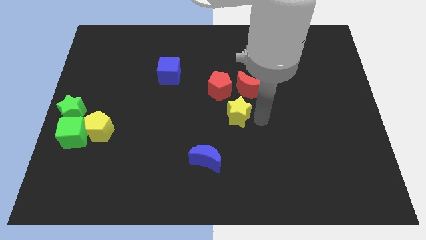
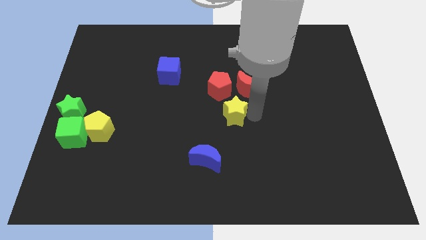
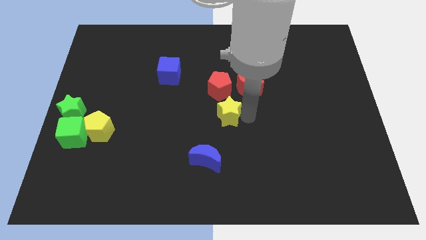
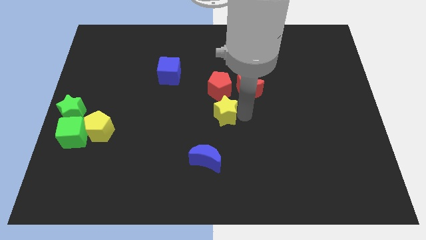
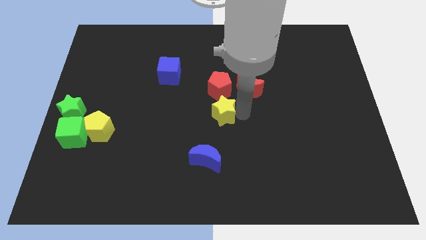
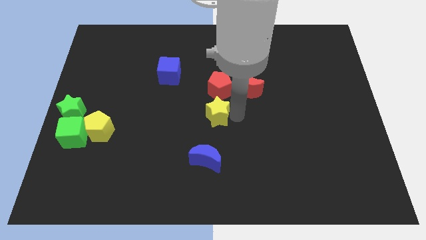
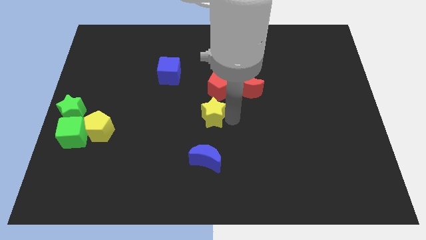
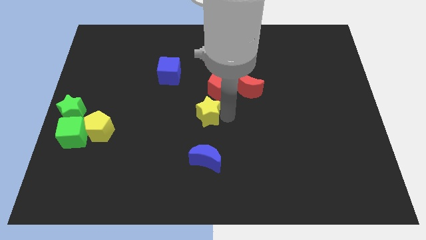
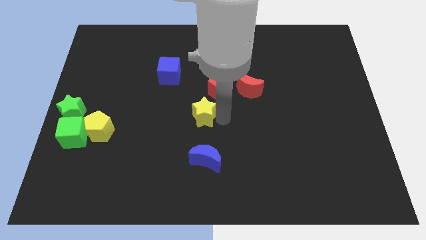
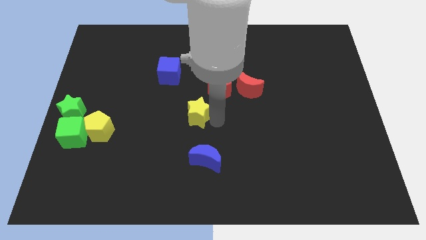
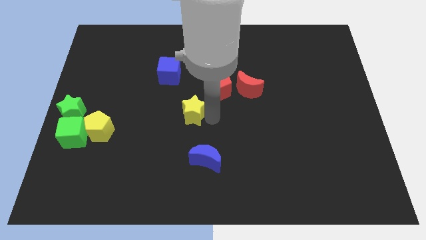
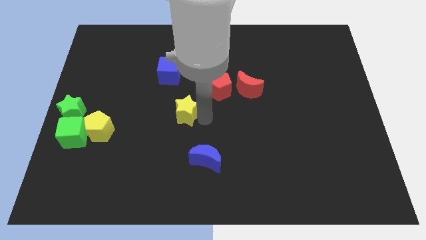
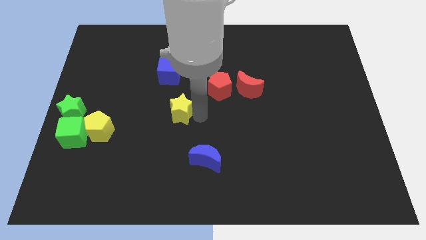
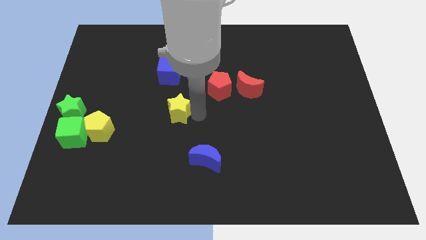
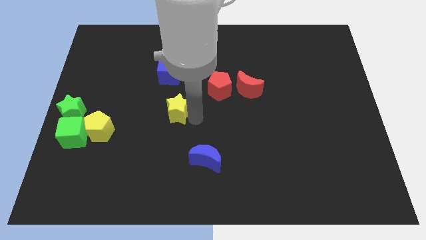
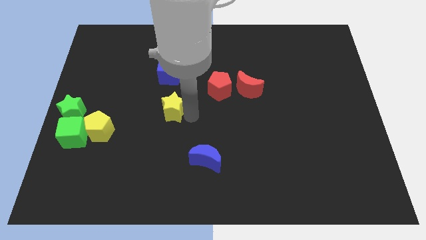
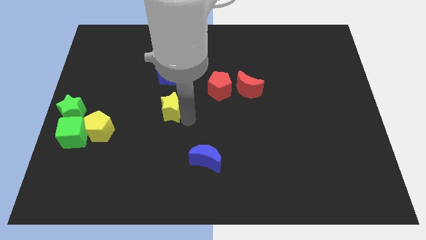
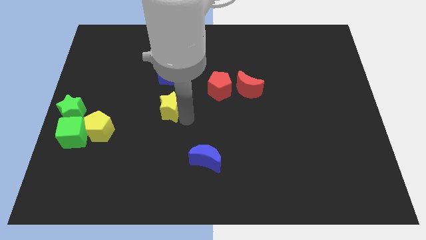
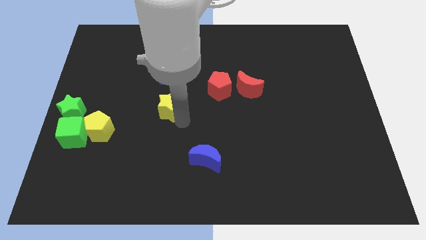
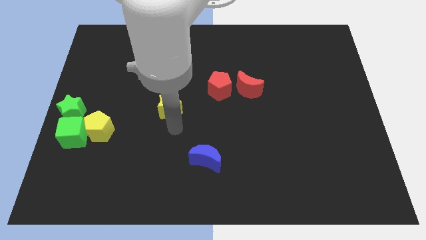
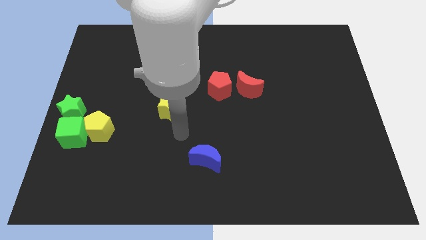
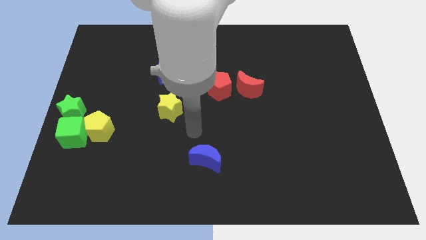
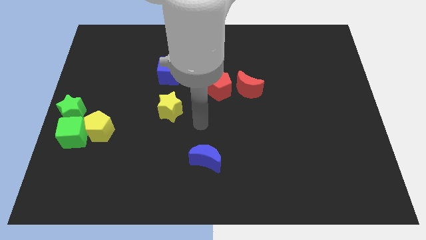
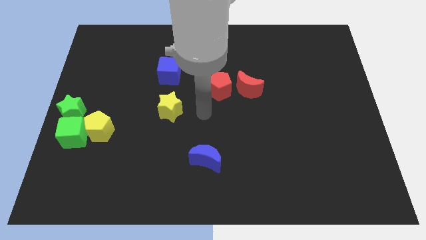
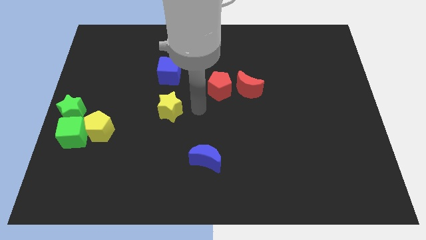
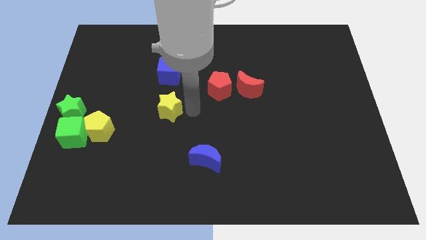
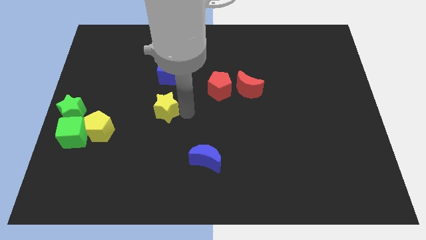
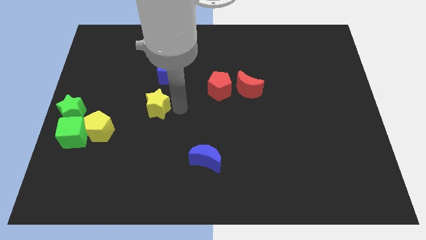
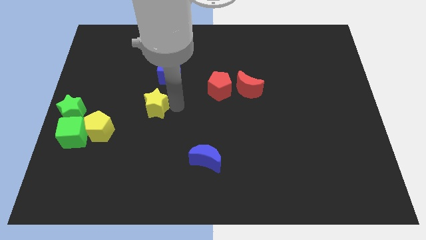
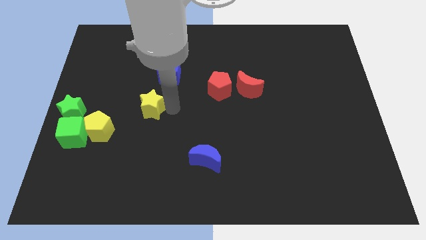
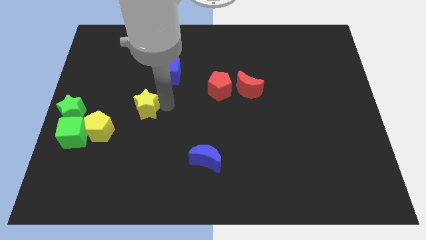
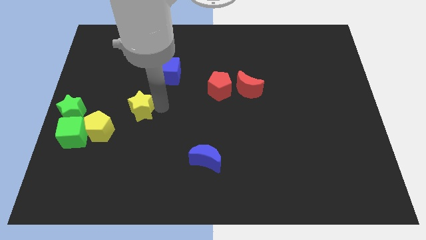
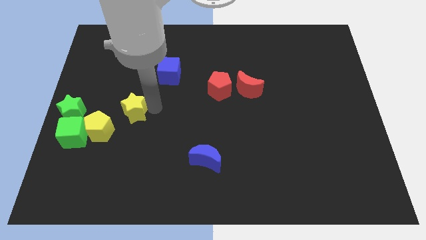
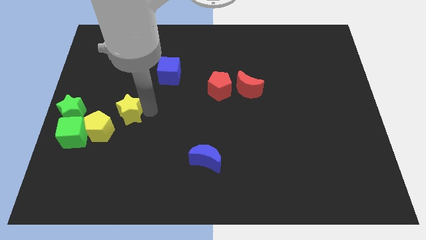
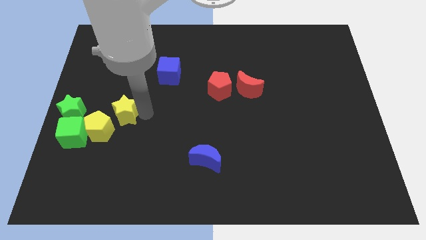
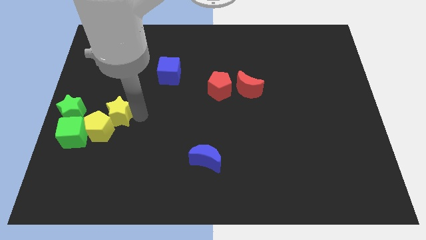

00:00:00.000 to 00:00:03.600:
move the yellow star diagonally bottom left to the blue cube

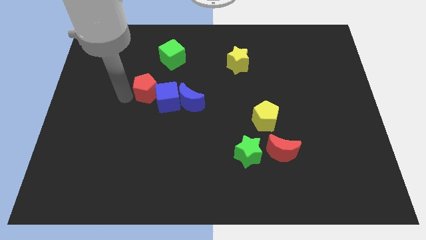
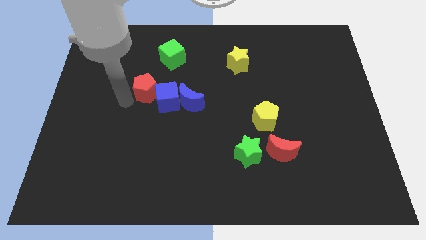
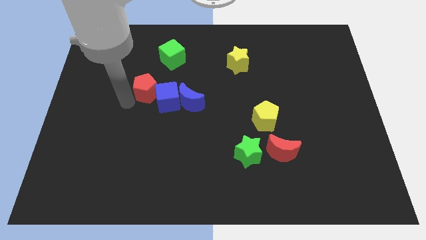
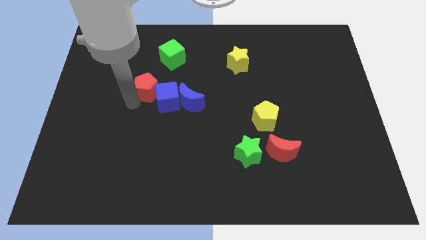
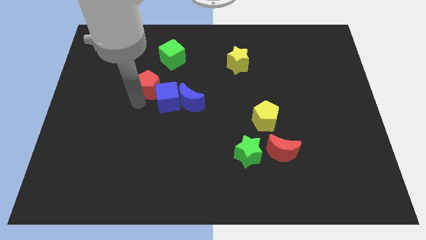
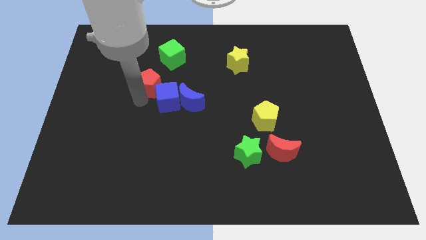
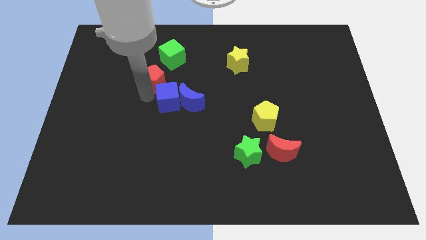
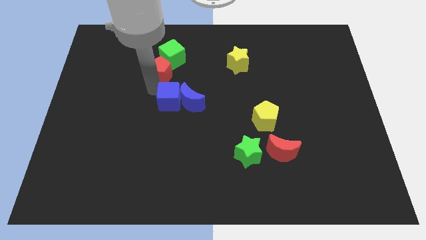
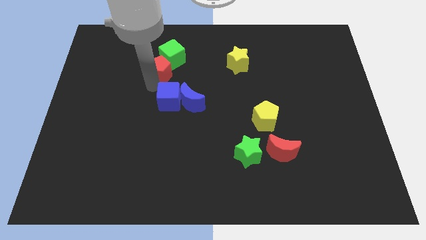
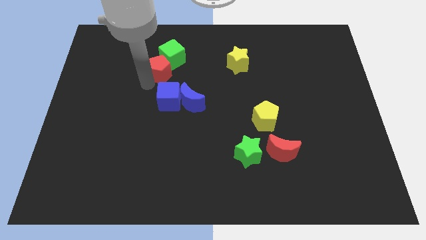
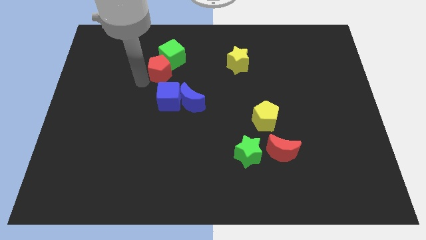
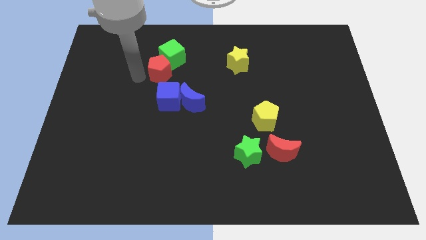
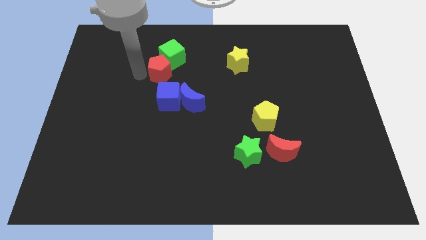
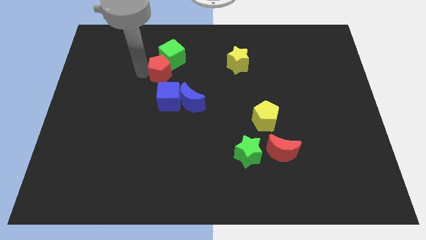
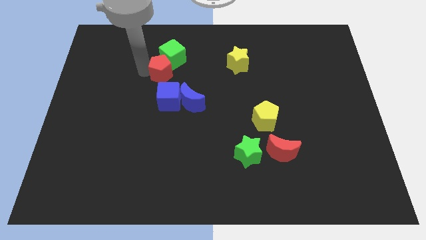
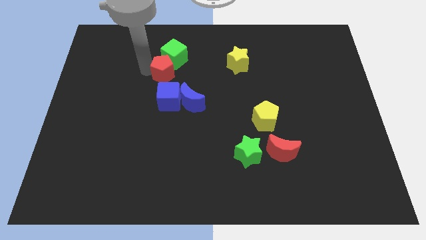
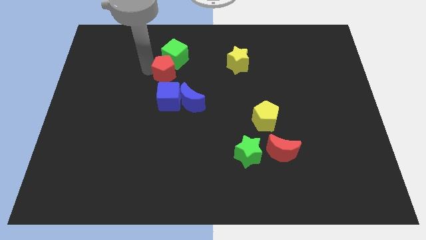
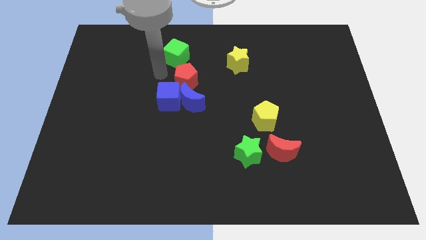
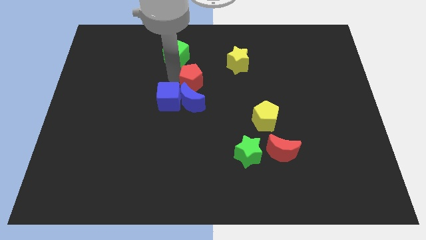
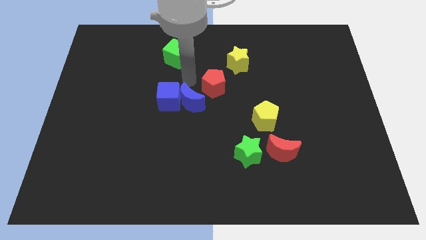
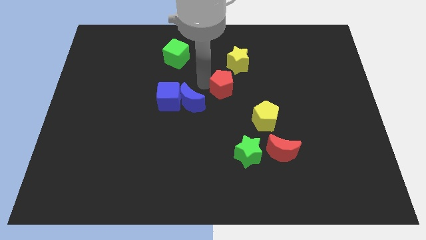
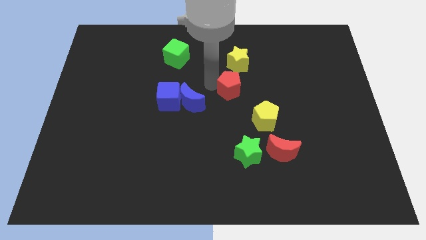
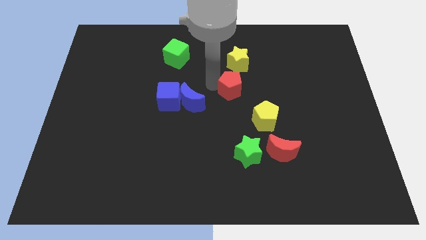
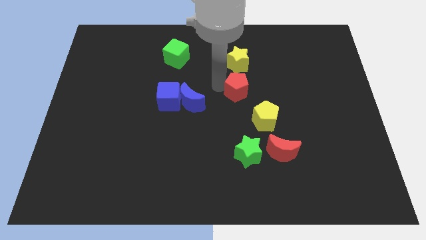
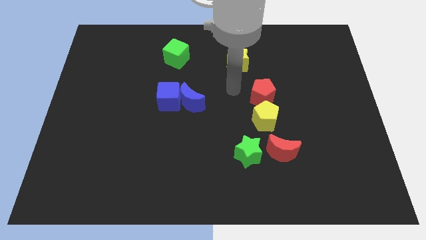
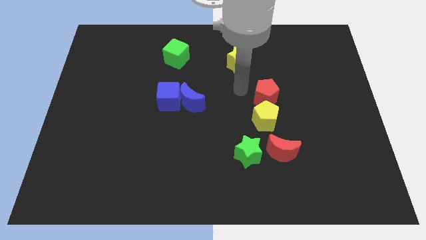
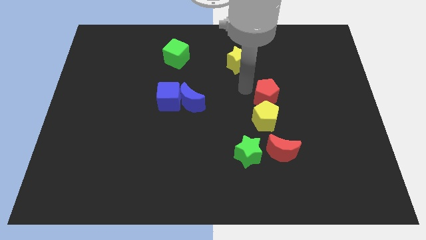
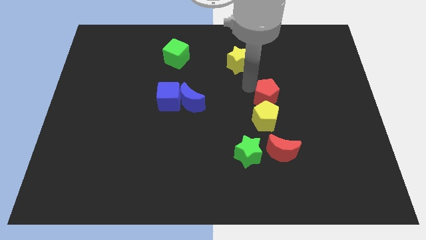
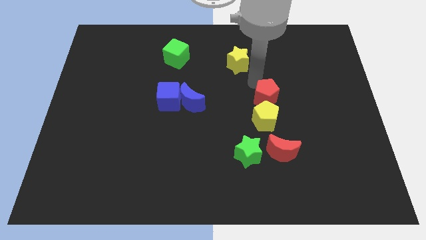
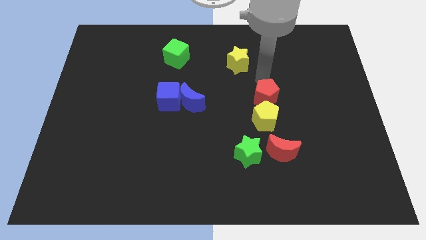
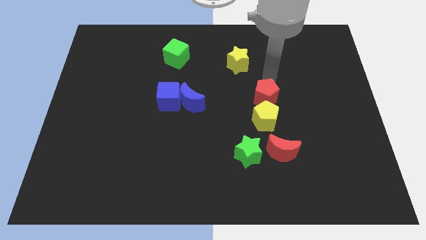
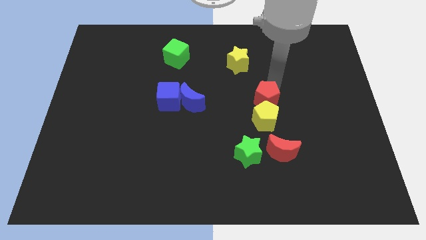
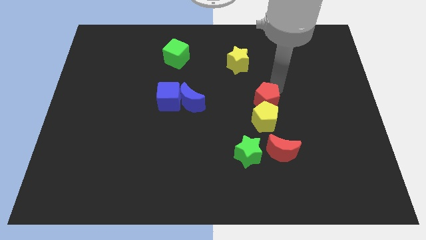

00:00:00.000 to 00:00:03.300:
push the red pentagon above the yellow pentagon

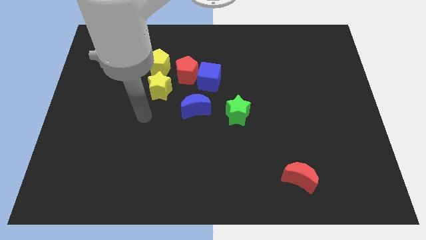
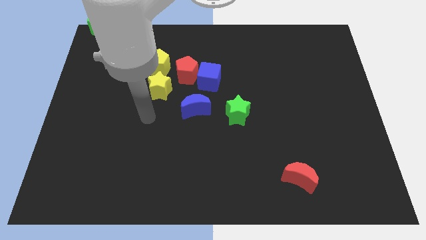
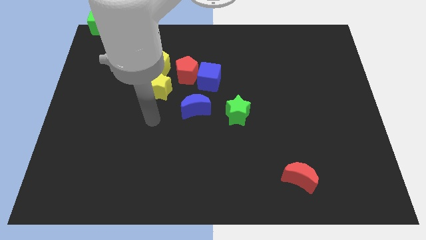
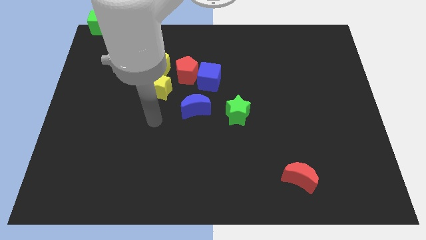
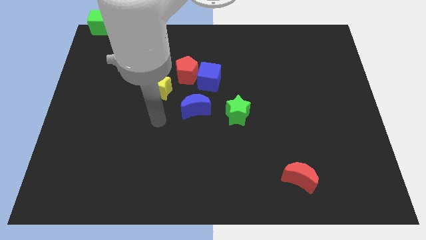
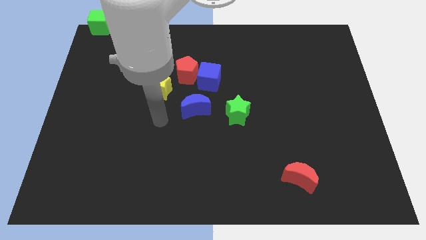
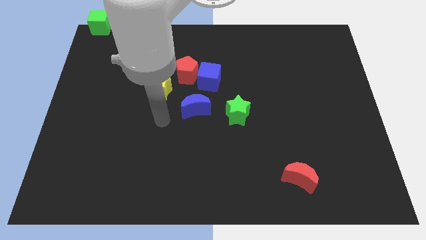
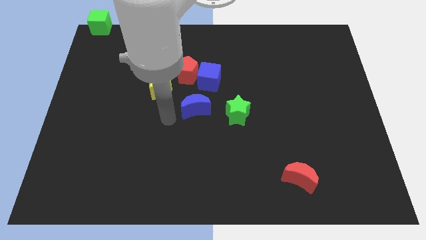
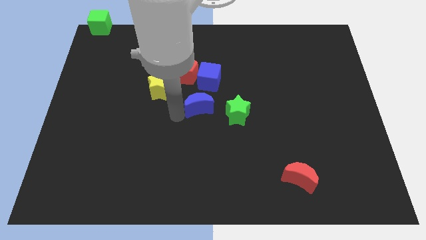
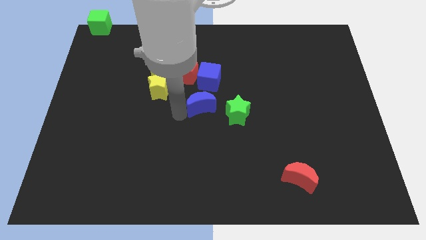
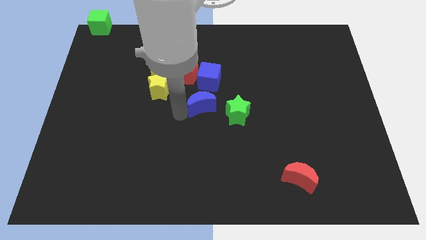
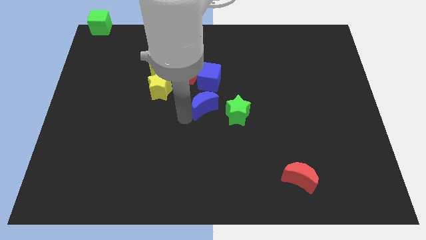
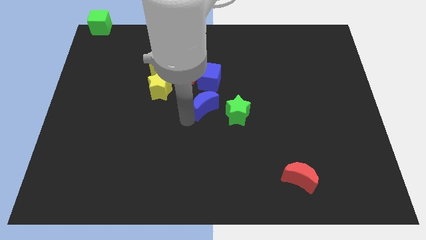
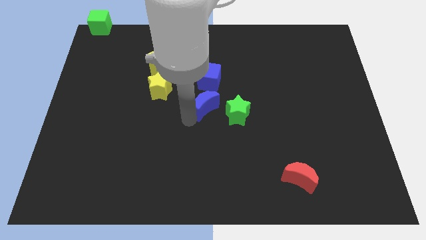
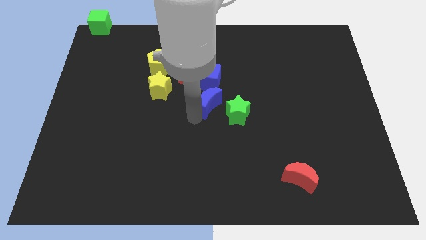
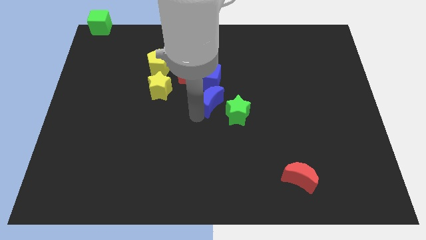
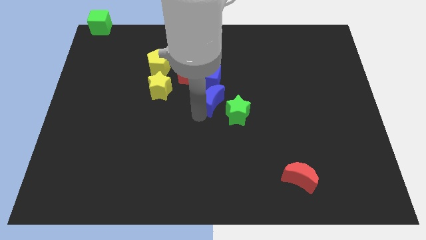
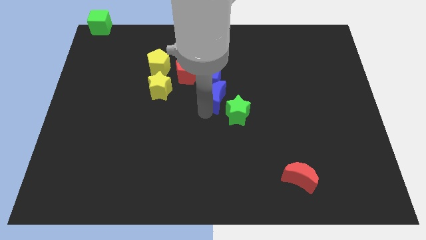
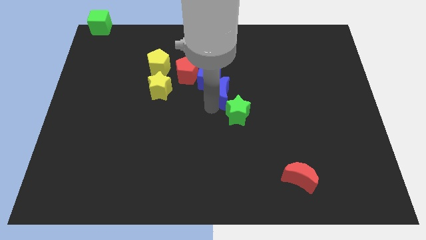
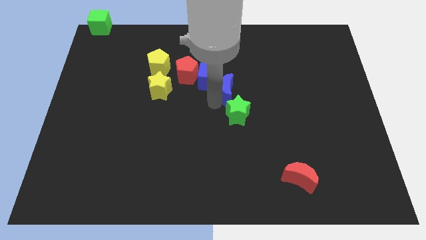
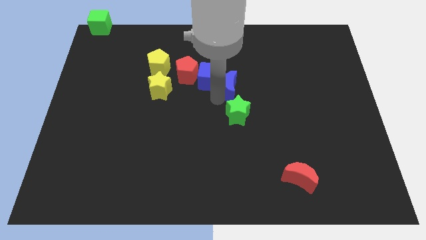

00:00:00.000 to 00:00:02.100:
place the blue moon in between the blue cube and green star
